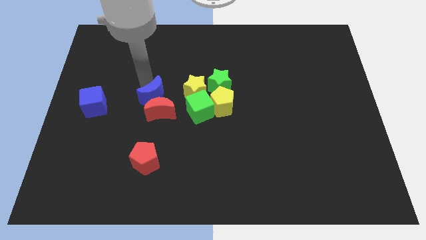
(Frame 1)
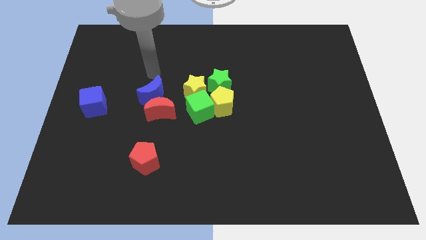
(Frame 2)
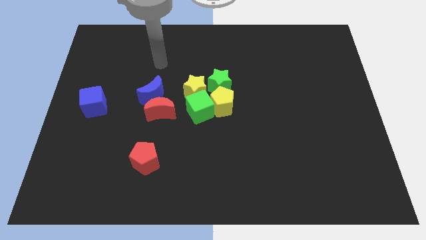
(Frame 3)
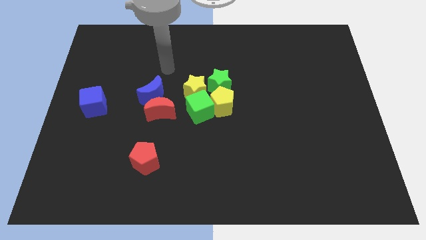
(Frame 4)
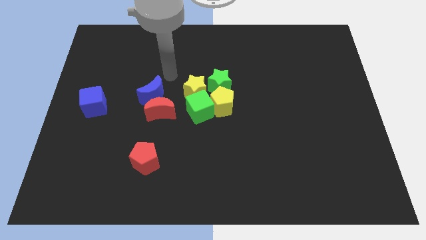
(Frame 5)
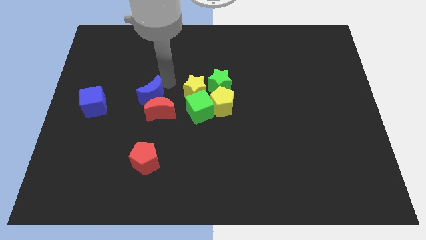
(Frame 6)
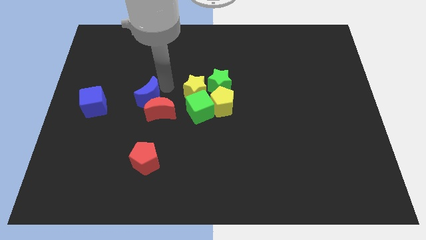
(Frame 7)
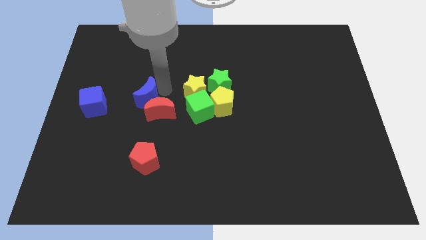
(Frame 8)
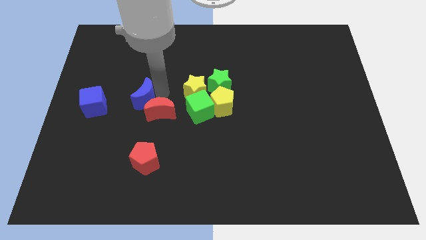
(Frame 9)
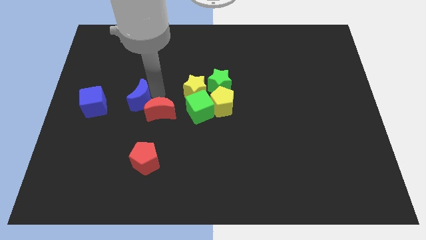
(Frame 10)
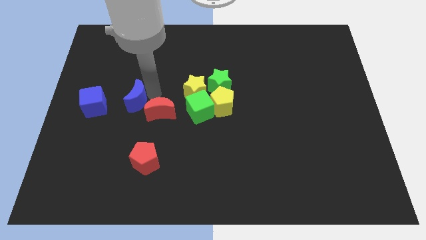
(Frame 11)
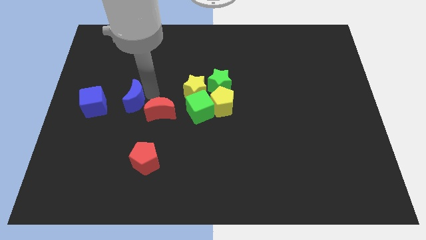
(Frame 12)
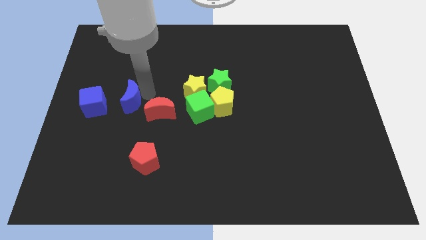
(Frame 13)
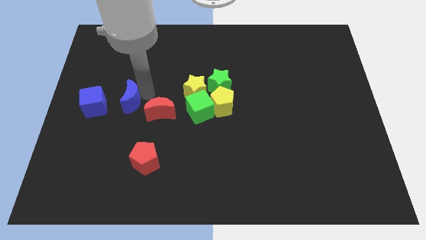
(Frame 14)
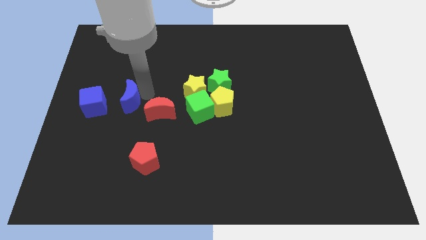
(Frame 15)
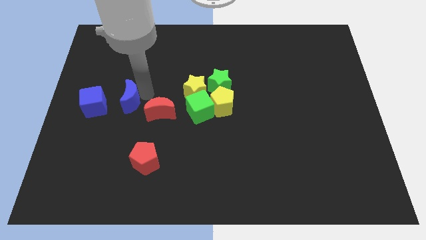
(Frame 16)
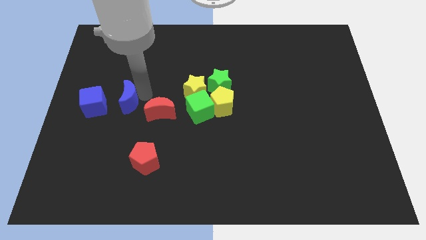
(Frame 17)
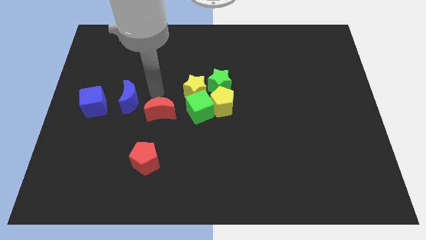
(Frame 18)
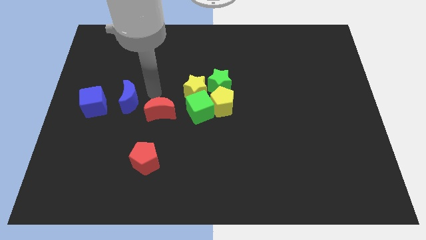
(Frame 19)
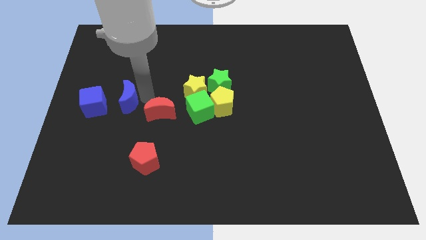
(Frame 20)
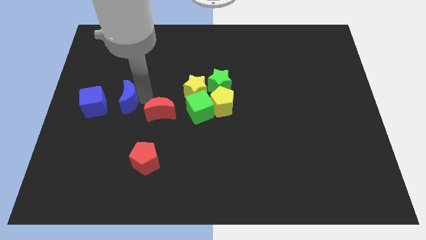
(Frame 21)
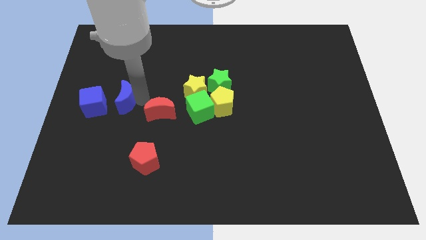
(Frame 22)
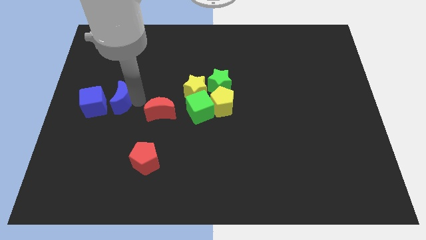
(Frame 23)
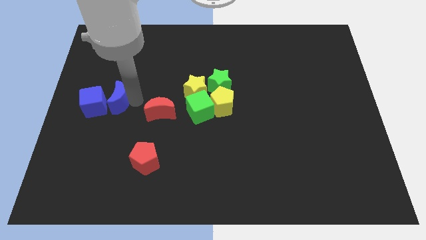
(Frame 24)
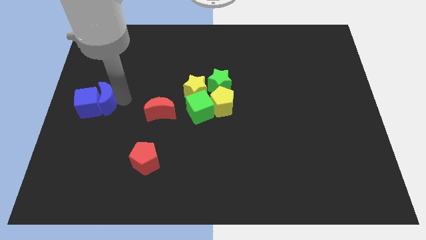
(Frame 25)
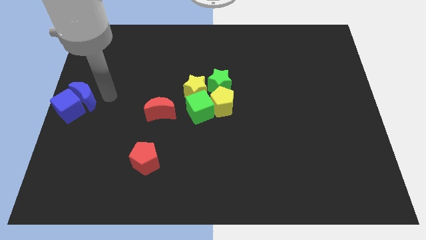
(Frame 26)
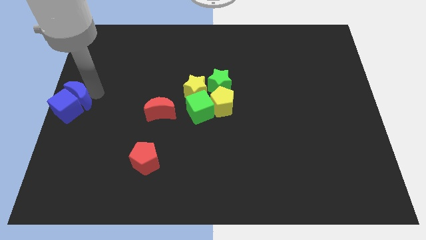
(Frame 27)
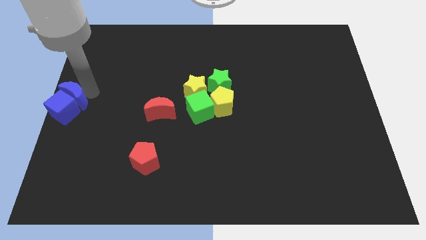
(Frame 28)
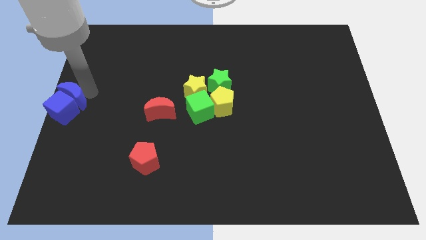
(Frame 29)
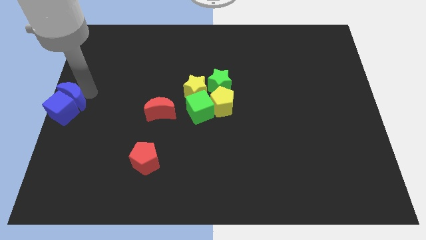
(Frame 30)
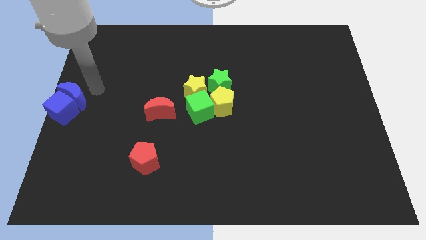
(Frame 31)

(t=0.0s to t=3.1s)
move blue moon and blue cube bottom left middle of the board

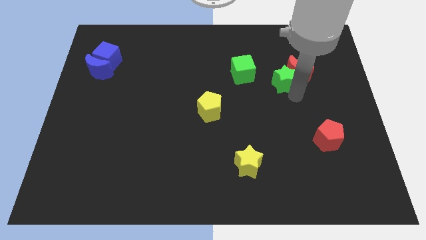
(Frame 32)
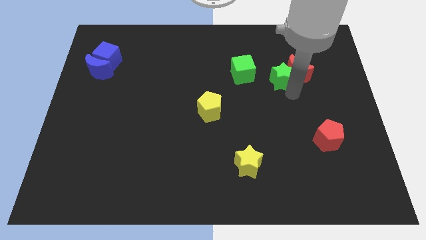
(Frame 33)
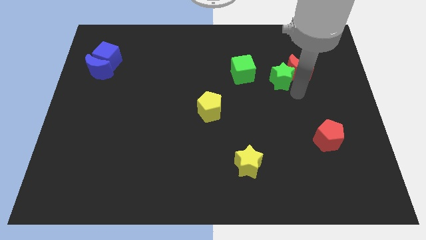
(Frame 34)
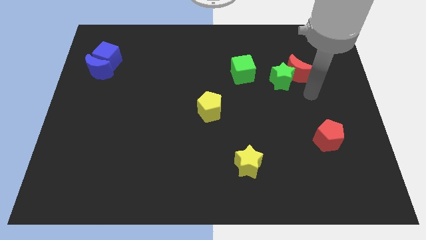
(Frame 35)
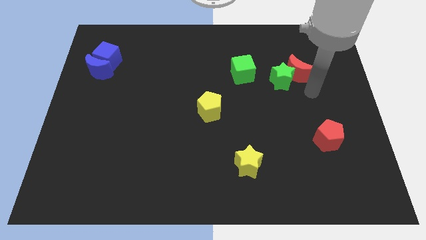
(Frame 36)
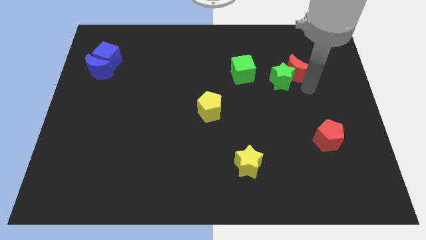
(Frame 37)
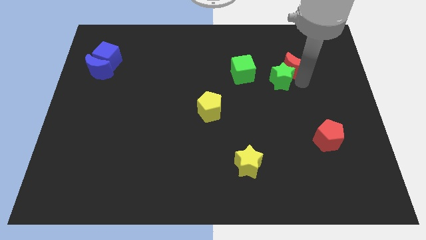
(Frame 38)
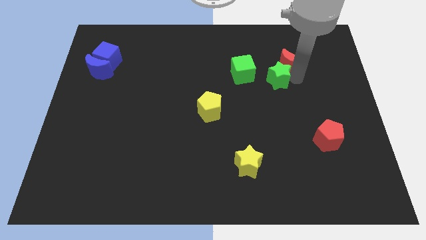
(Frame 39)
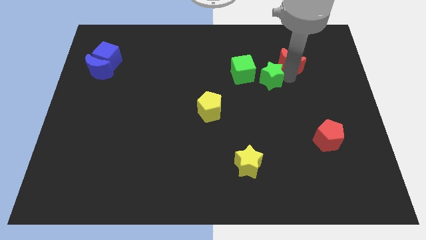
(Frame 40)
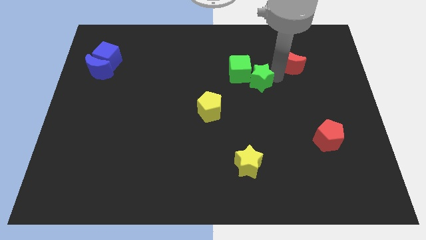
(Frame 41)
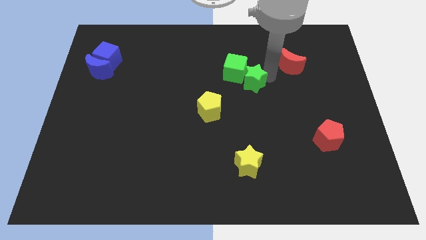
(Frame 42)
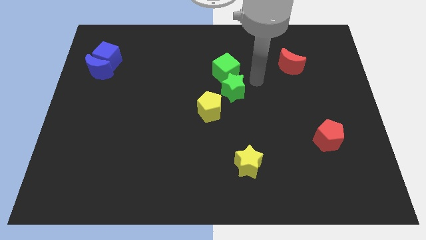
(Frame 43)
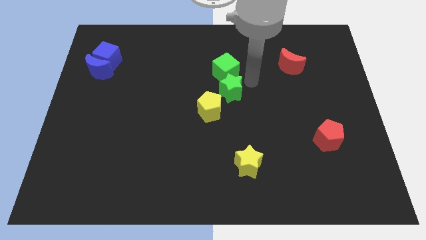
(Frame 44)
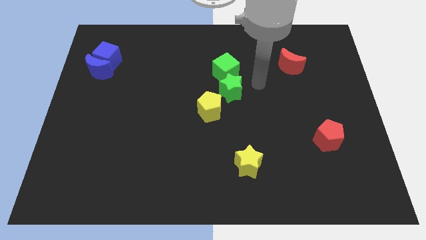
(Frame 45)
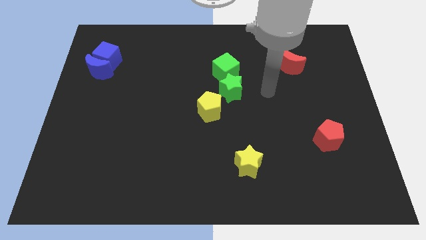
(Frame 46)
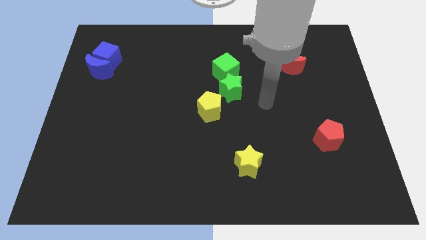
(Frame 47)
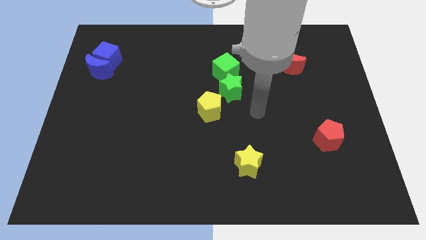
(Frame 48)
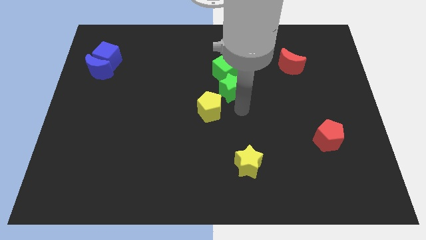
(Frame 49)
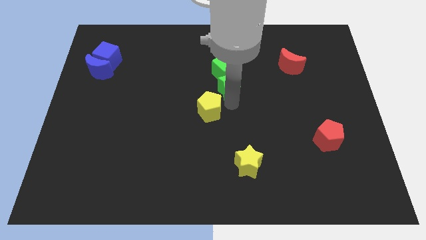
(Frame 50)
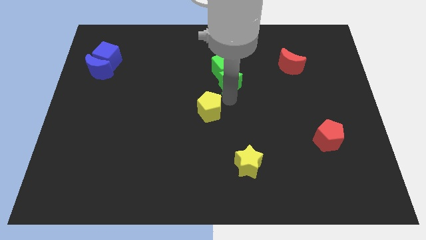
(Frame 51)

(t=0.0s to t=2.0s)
slide the green star into the green cube

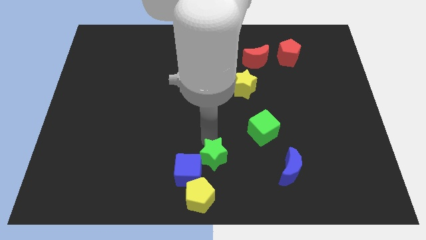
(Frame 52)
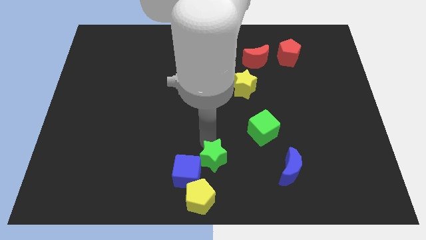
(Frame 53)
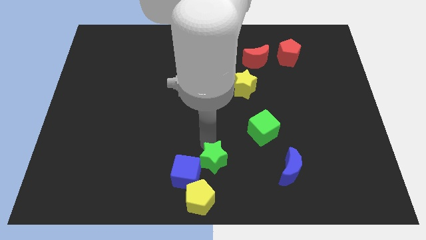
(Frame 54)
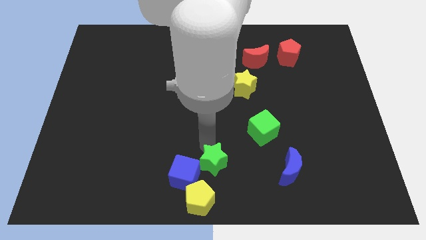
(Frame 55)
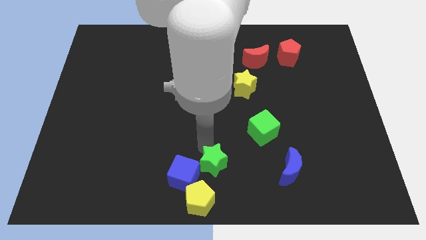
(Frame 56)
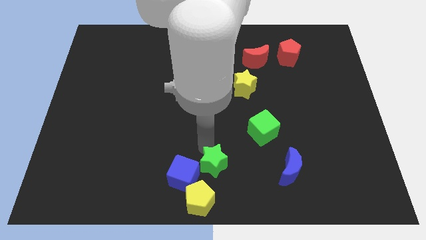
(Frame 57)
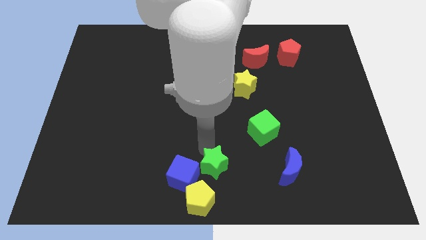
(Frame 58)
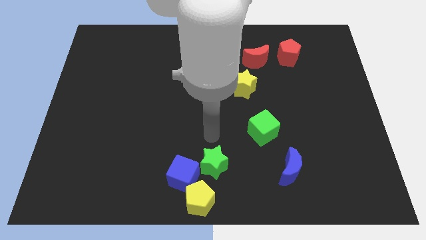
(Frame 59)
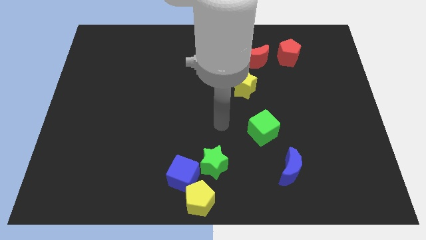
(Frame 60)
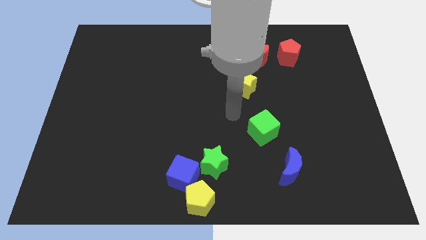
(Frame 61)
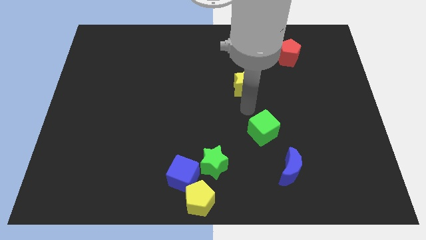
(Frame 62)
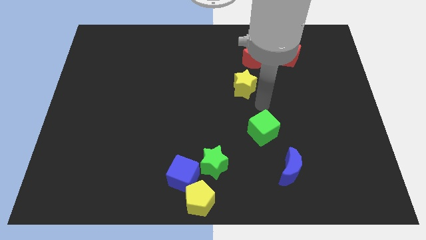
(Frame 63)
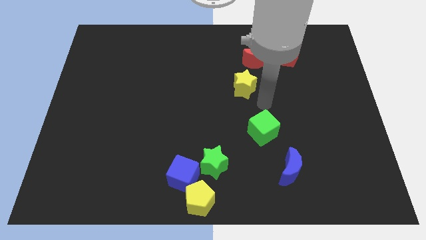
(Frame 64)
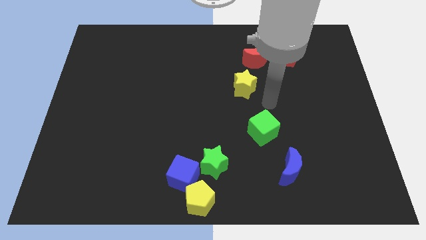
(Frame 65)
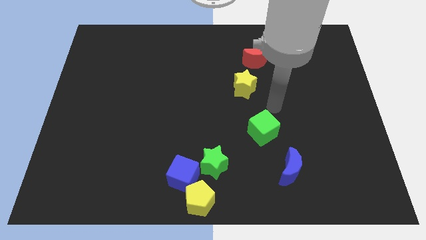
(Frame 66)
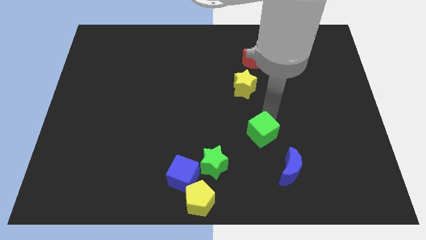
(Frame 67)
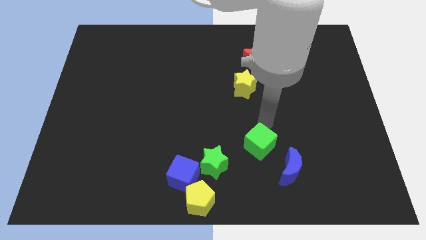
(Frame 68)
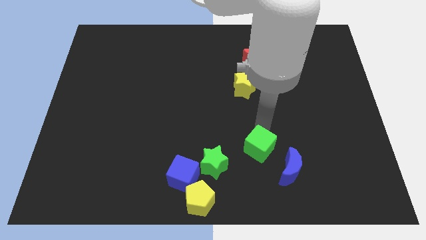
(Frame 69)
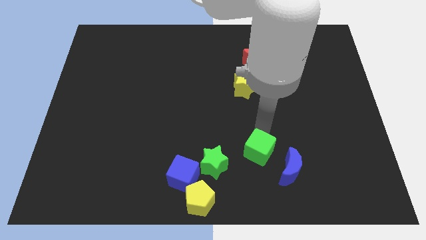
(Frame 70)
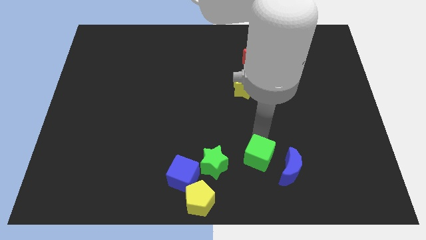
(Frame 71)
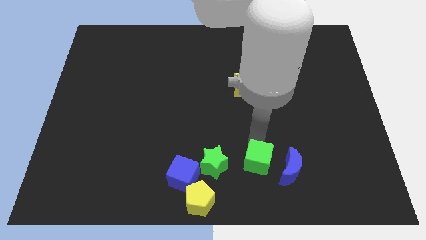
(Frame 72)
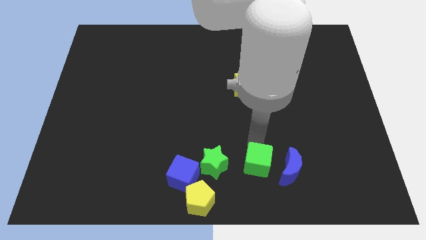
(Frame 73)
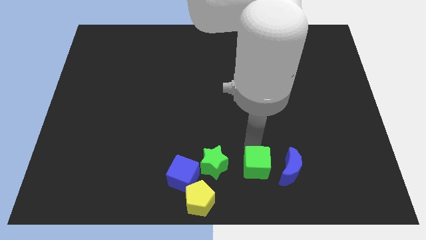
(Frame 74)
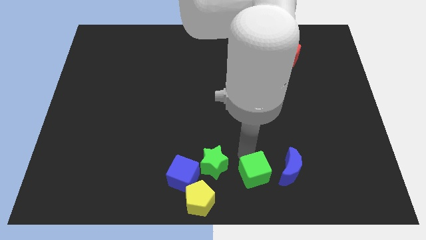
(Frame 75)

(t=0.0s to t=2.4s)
place green cube in between the blocks

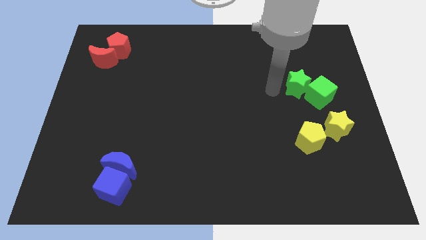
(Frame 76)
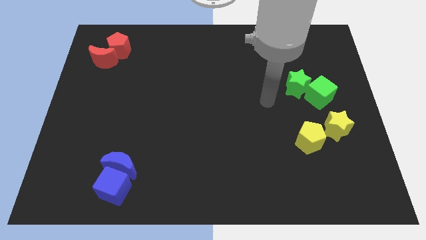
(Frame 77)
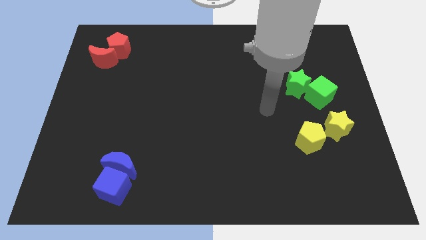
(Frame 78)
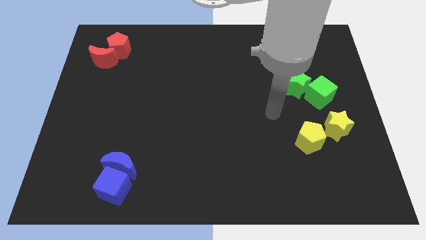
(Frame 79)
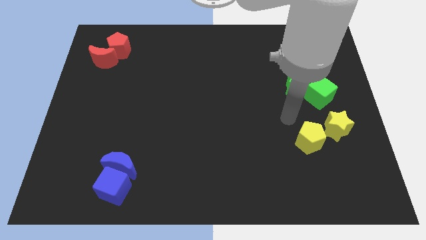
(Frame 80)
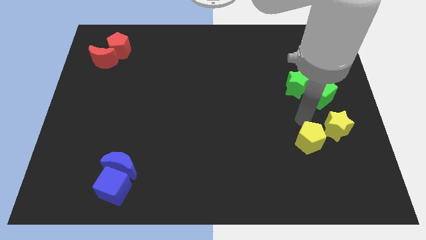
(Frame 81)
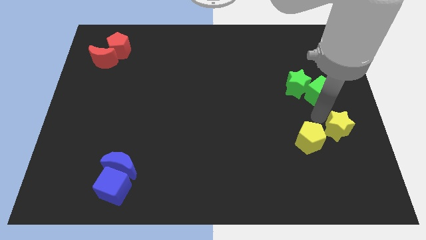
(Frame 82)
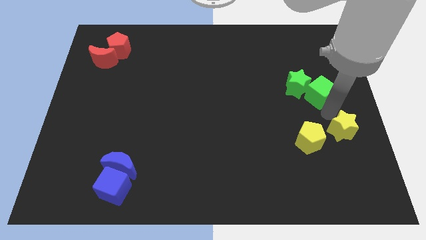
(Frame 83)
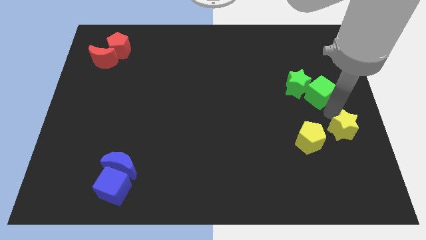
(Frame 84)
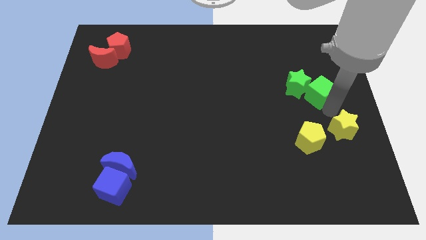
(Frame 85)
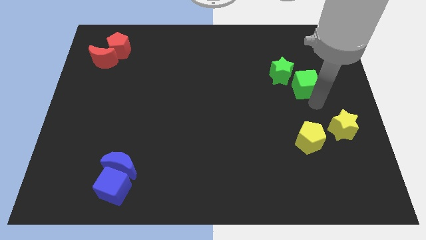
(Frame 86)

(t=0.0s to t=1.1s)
tap the yellow star

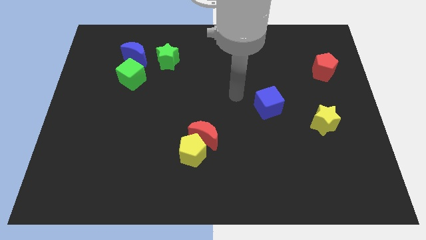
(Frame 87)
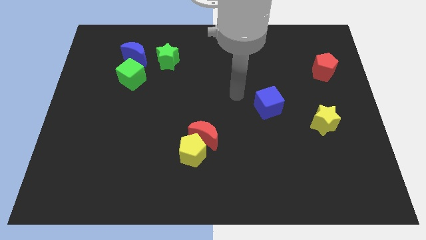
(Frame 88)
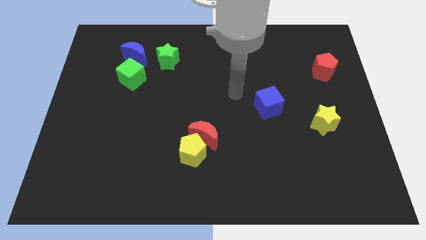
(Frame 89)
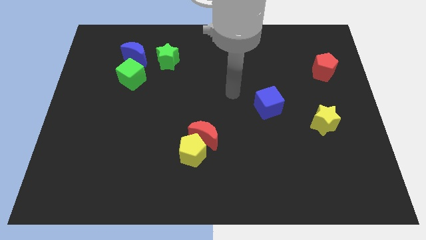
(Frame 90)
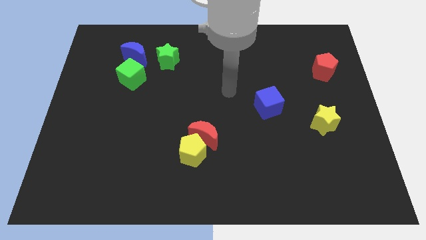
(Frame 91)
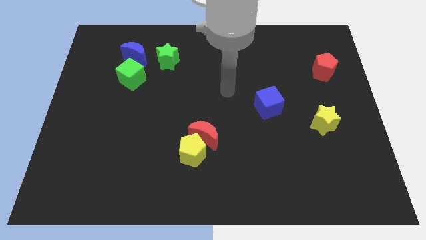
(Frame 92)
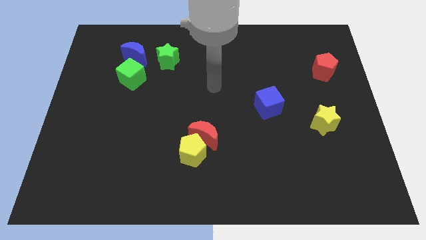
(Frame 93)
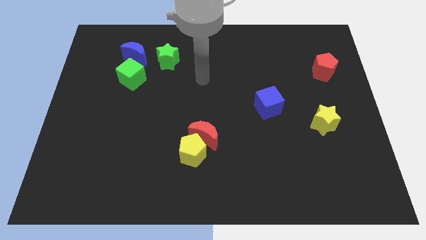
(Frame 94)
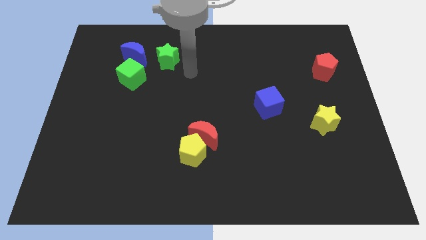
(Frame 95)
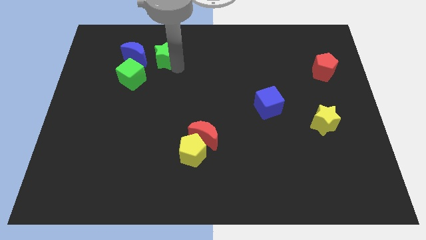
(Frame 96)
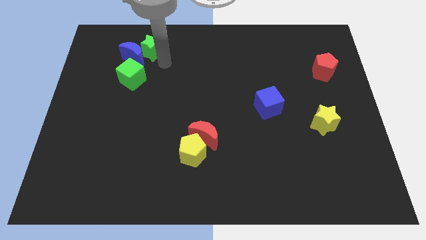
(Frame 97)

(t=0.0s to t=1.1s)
move the green star up slightly
